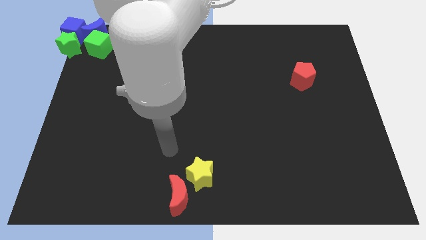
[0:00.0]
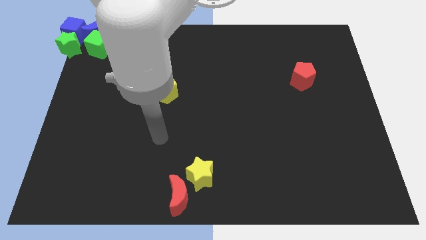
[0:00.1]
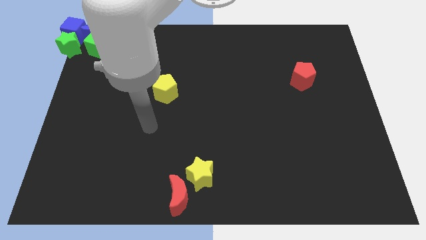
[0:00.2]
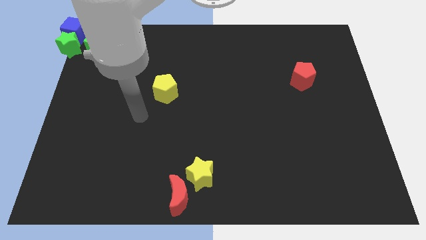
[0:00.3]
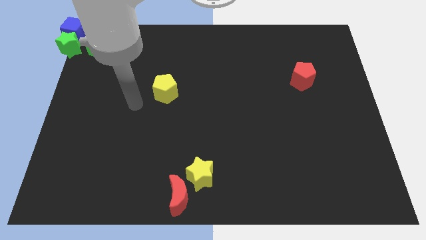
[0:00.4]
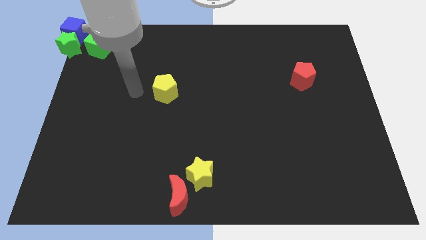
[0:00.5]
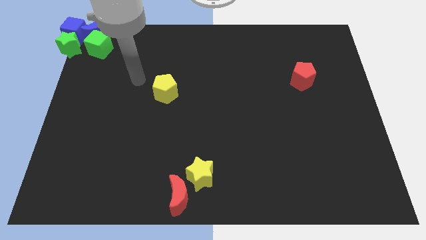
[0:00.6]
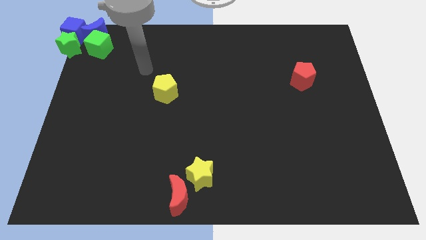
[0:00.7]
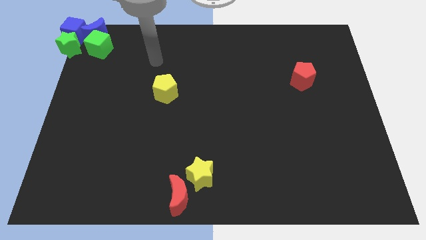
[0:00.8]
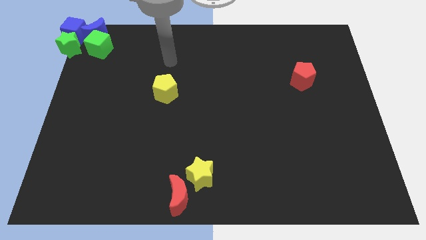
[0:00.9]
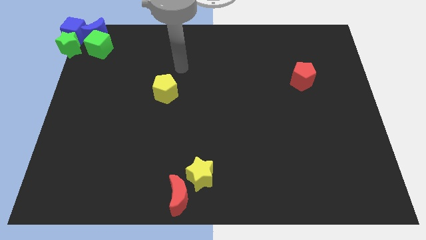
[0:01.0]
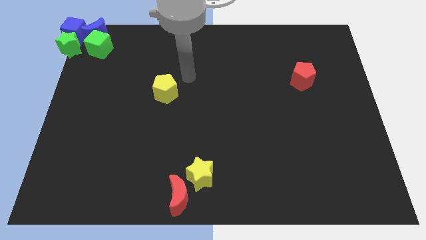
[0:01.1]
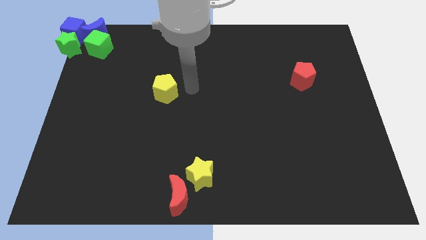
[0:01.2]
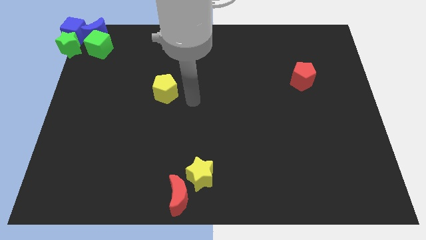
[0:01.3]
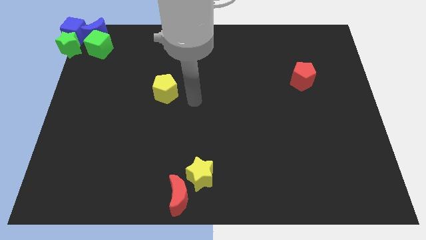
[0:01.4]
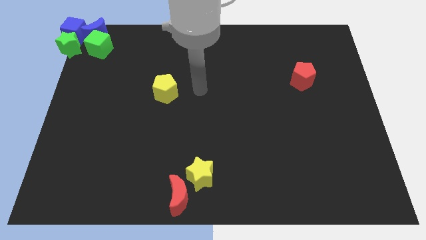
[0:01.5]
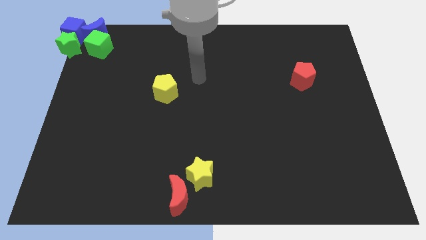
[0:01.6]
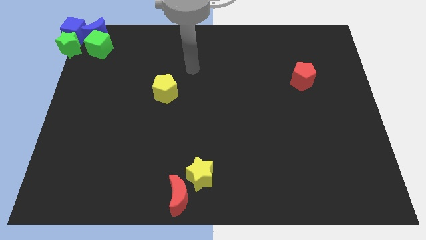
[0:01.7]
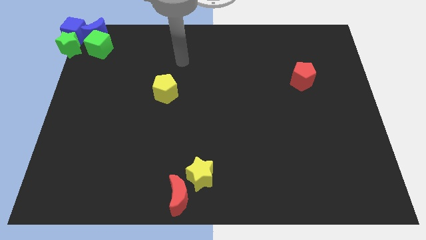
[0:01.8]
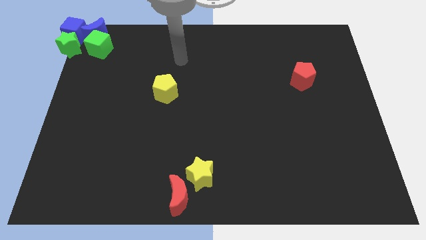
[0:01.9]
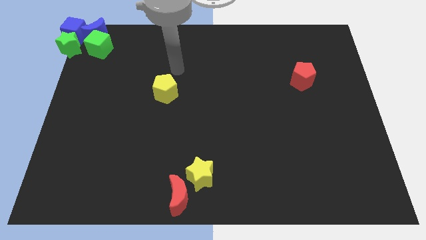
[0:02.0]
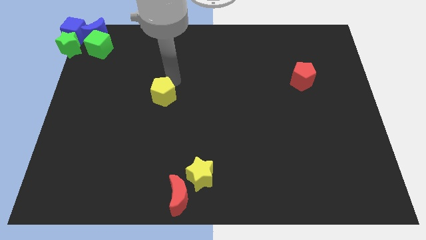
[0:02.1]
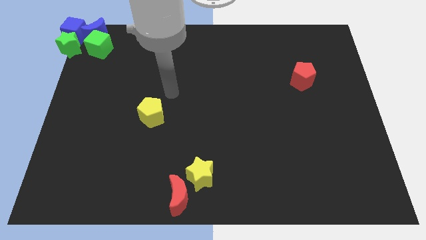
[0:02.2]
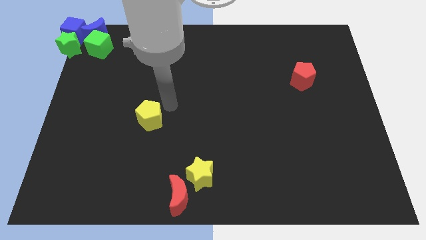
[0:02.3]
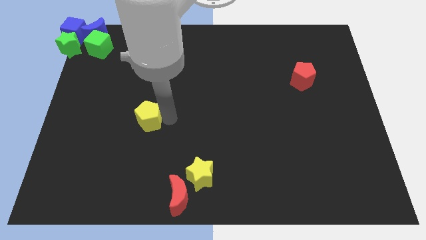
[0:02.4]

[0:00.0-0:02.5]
move the arm above to the yellow pentagon

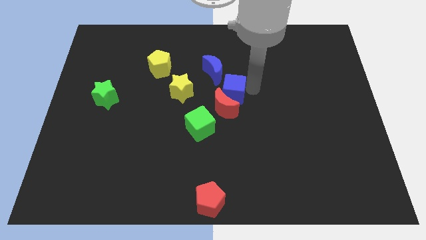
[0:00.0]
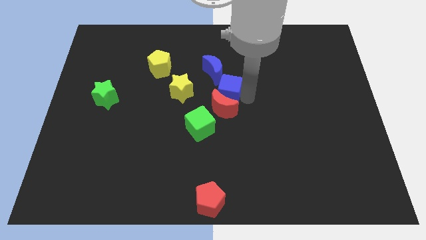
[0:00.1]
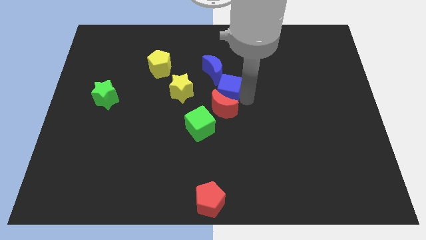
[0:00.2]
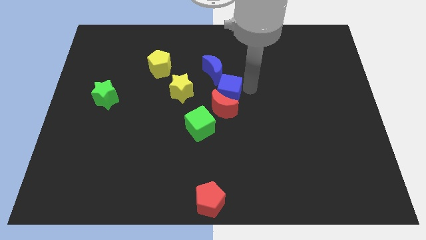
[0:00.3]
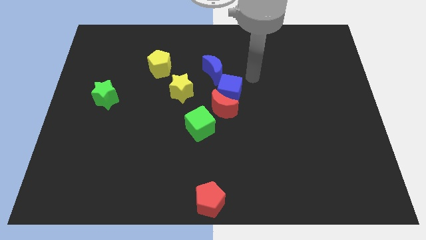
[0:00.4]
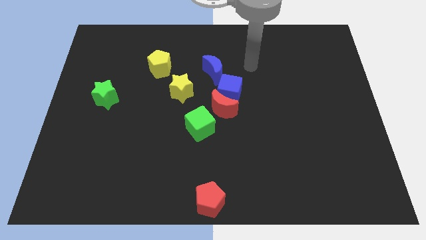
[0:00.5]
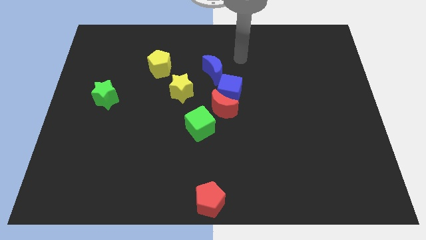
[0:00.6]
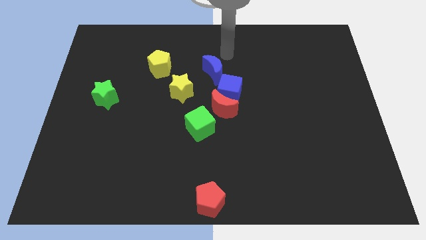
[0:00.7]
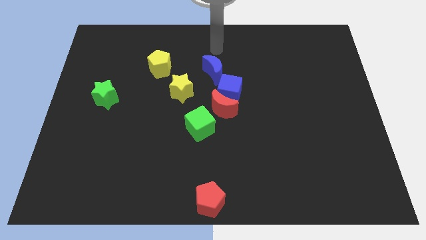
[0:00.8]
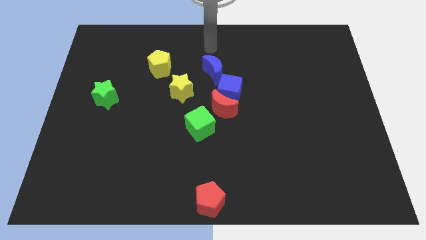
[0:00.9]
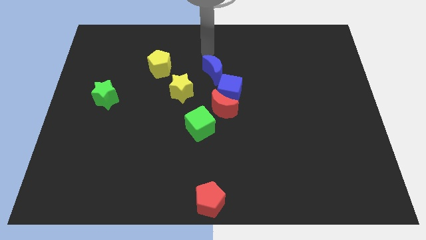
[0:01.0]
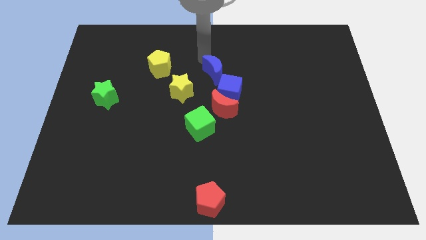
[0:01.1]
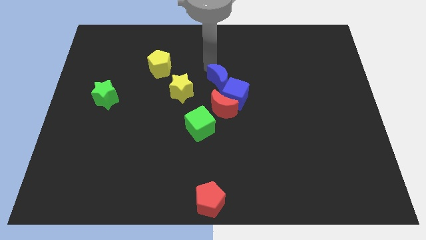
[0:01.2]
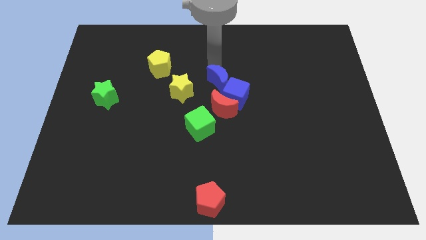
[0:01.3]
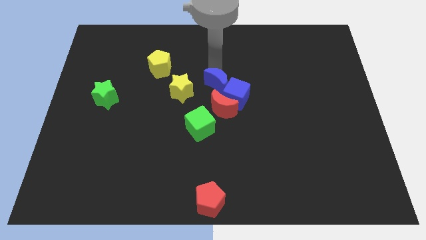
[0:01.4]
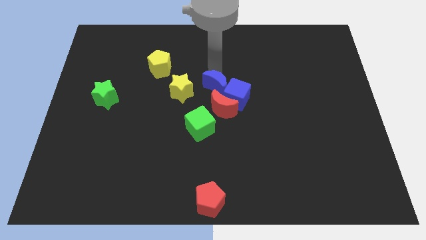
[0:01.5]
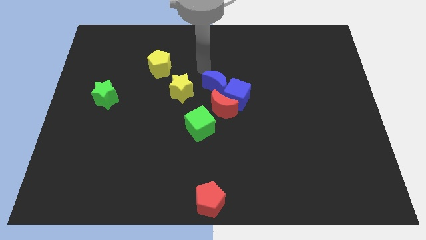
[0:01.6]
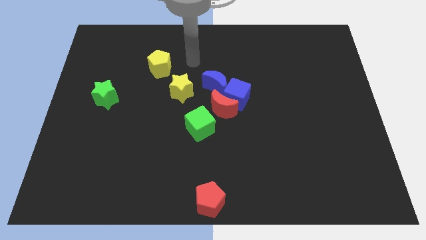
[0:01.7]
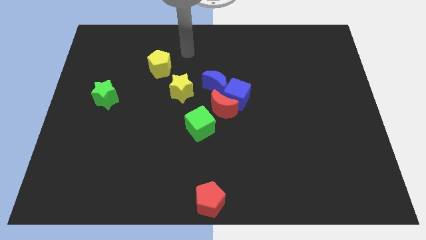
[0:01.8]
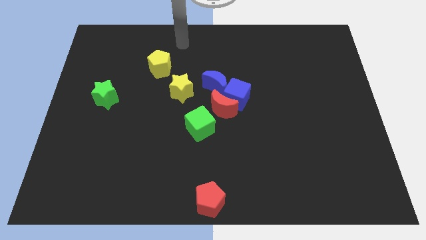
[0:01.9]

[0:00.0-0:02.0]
adjust the position of the blue moon to touch the top left of the blue cube

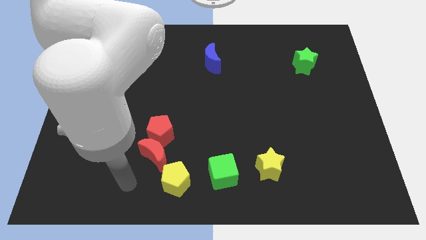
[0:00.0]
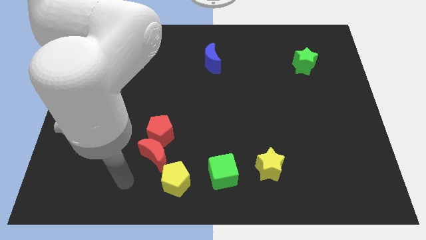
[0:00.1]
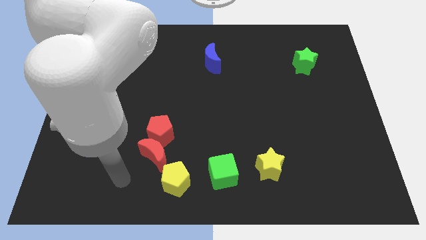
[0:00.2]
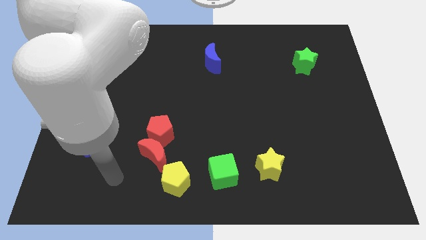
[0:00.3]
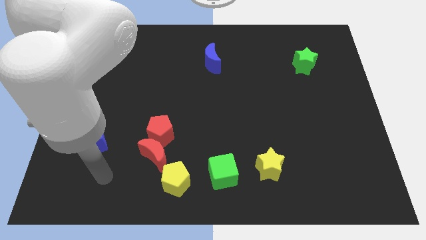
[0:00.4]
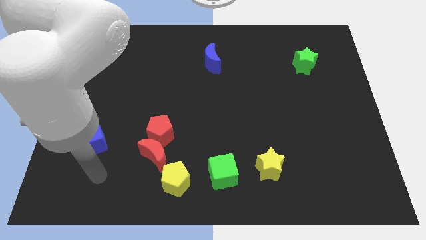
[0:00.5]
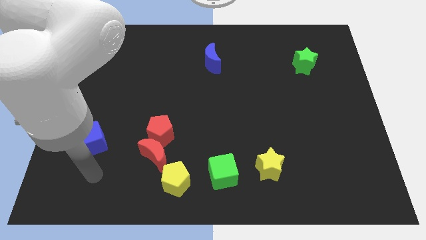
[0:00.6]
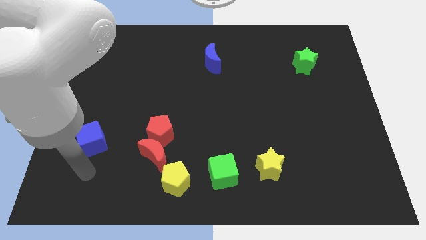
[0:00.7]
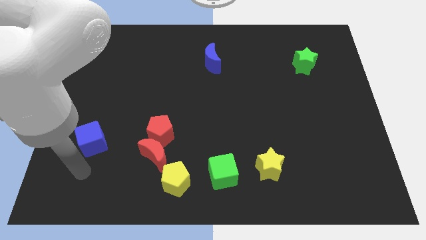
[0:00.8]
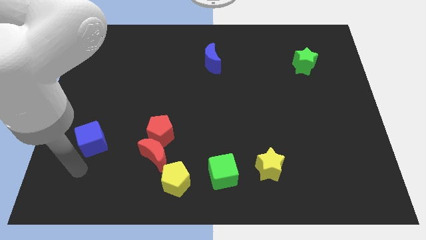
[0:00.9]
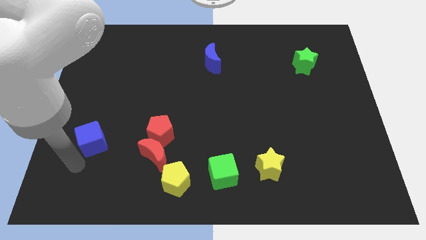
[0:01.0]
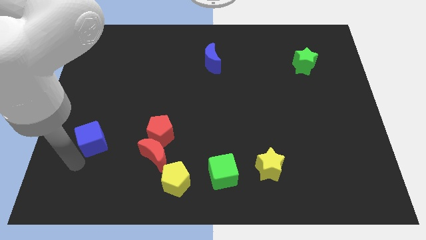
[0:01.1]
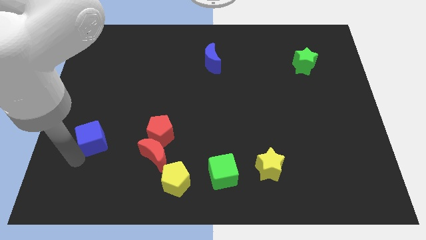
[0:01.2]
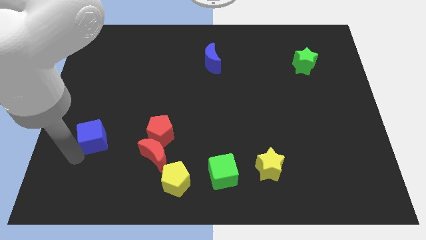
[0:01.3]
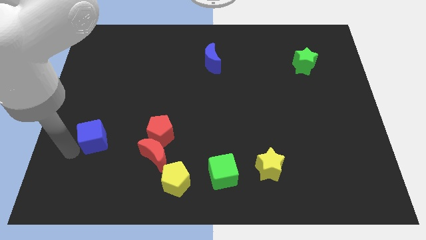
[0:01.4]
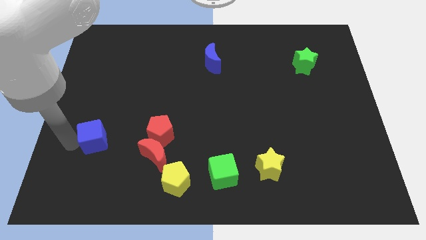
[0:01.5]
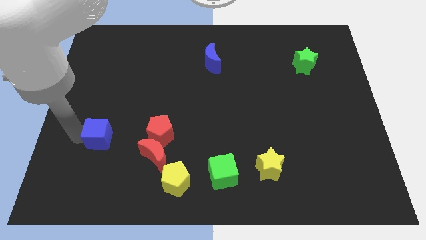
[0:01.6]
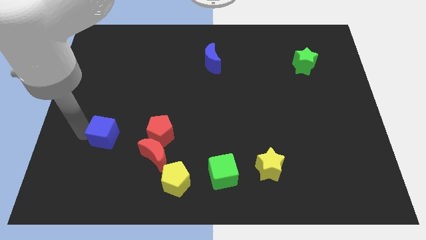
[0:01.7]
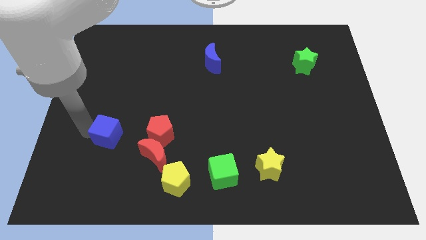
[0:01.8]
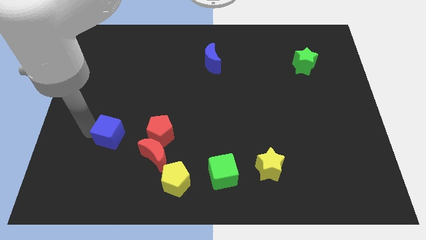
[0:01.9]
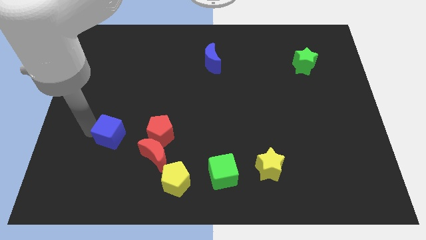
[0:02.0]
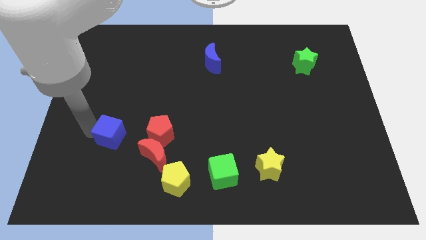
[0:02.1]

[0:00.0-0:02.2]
move the blue cube towards the red blocks

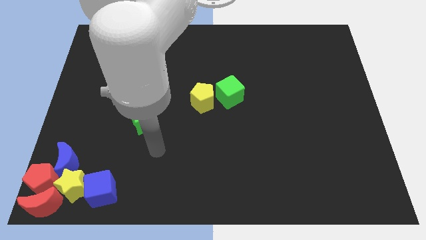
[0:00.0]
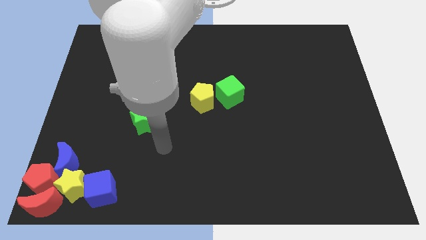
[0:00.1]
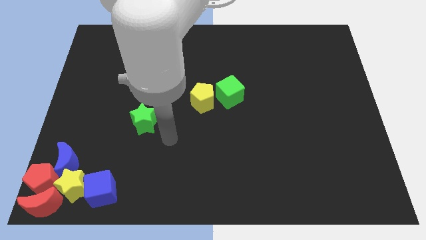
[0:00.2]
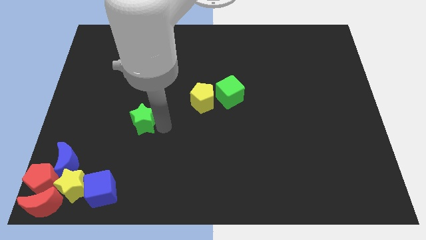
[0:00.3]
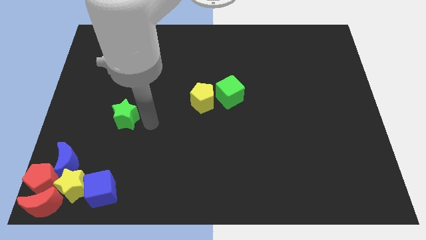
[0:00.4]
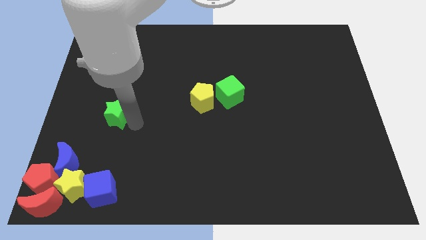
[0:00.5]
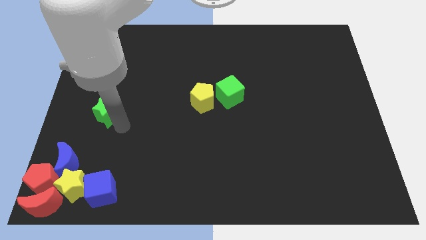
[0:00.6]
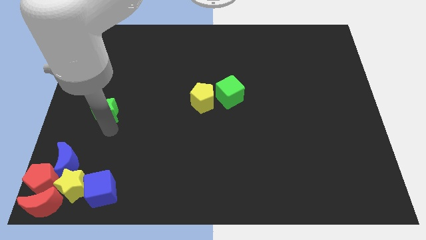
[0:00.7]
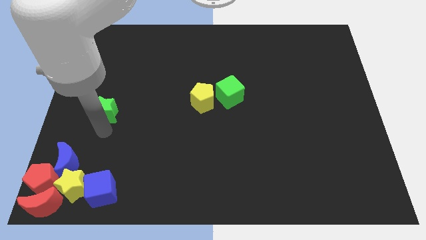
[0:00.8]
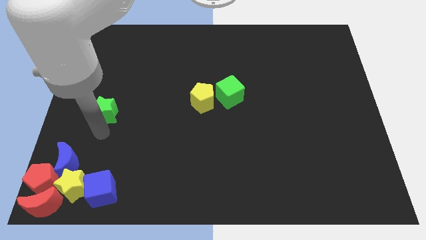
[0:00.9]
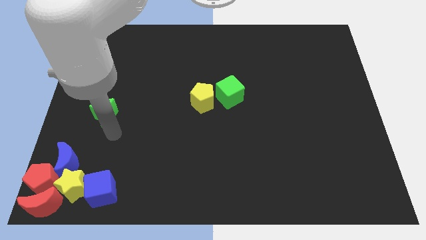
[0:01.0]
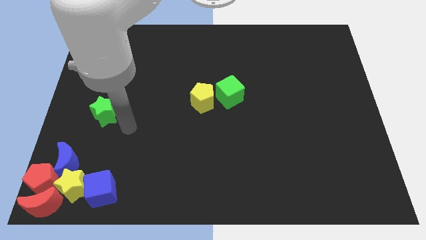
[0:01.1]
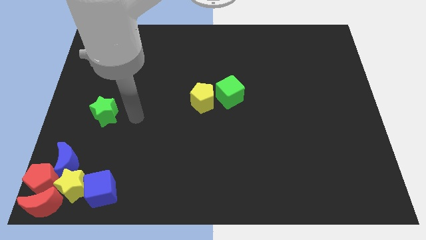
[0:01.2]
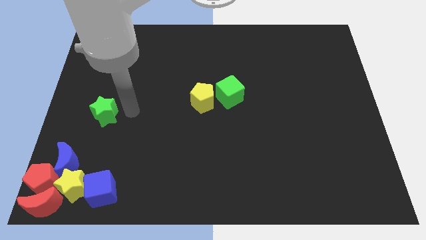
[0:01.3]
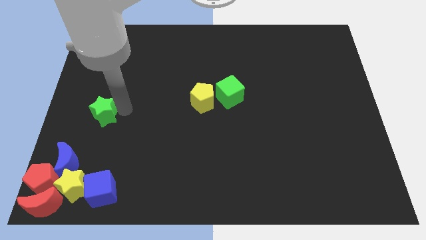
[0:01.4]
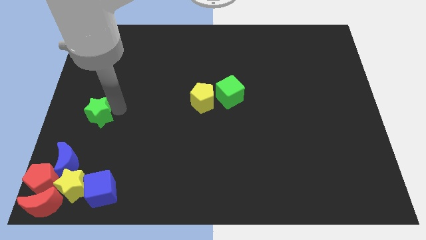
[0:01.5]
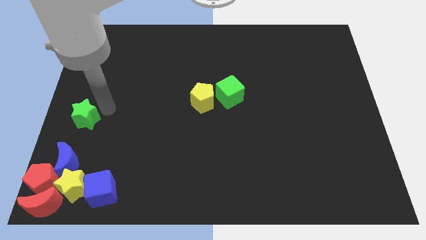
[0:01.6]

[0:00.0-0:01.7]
place the green star above the blue cube

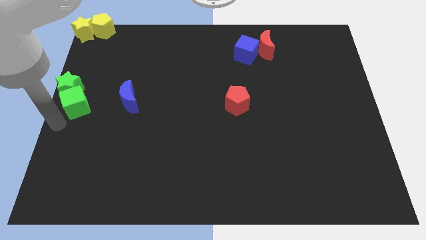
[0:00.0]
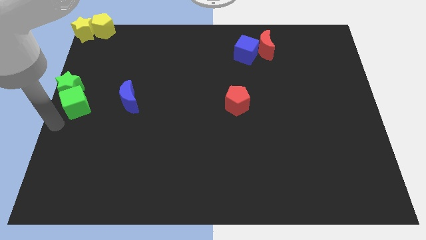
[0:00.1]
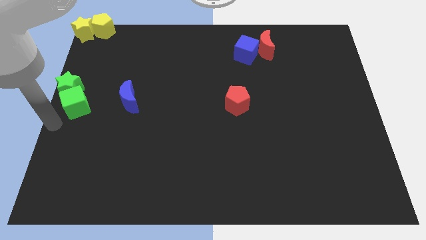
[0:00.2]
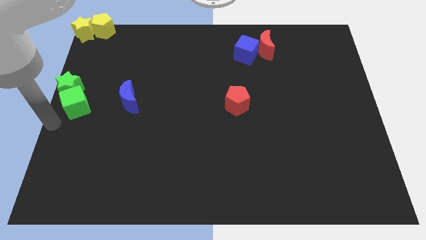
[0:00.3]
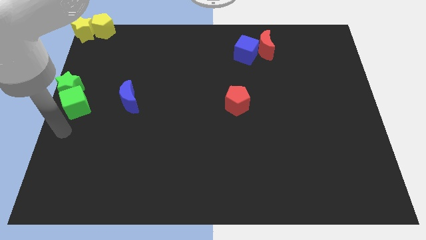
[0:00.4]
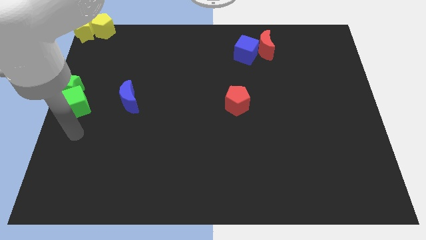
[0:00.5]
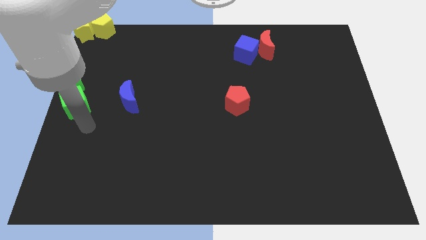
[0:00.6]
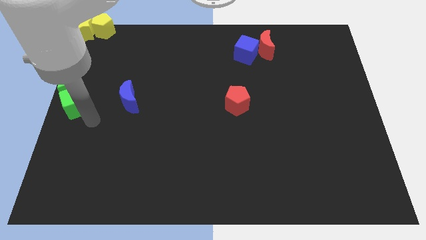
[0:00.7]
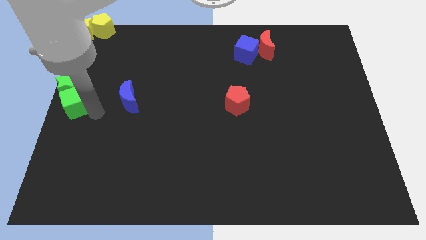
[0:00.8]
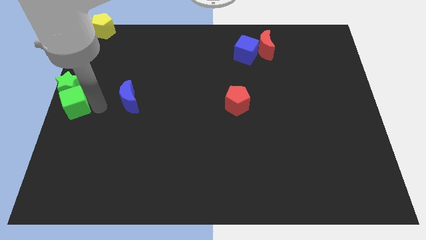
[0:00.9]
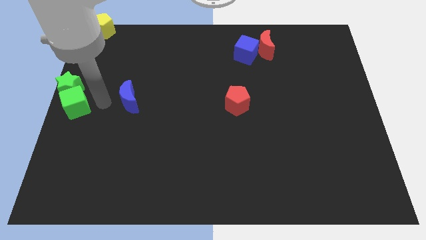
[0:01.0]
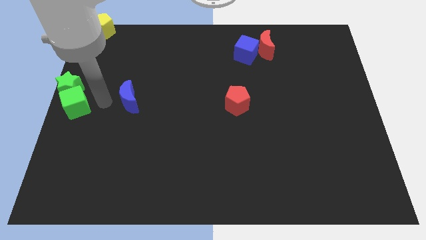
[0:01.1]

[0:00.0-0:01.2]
point your arm in between the blue moon and green cube
